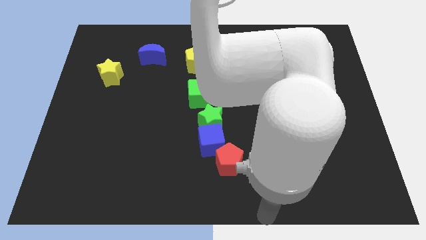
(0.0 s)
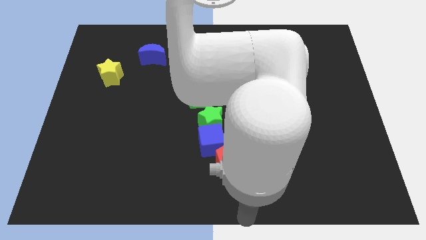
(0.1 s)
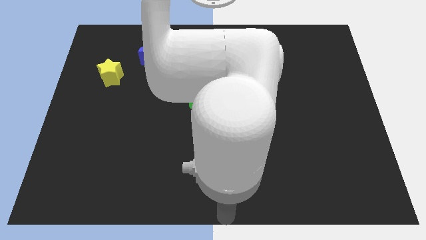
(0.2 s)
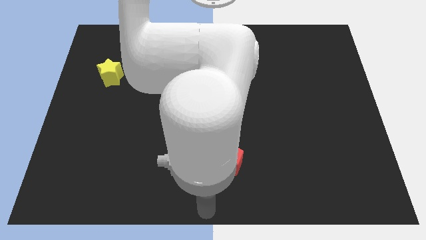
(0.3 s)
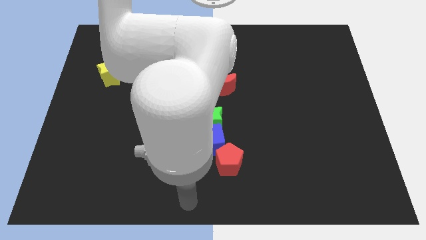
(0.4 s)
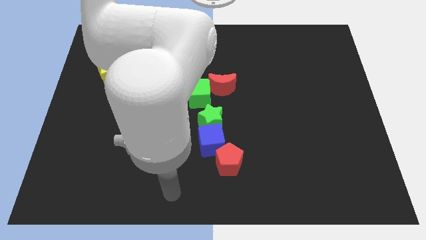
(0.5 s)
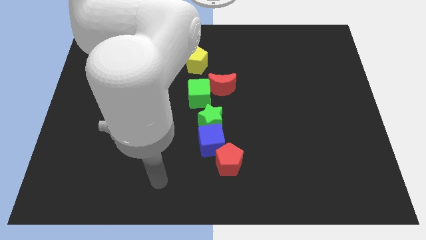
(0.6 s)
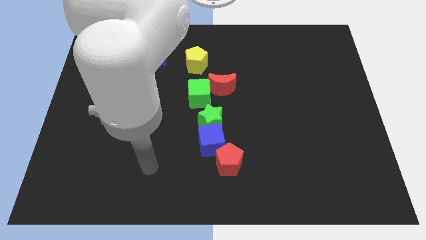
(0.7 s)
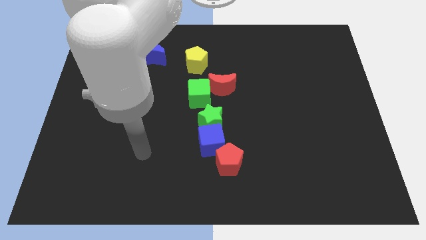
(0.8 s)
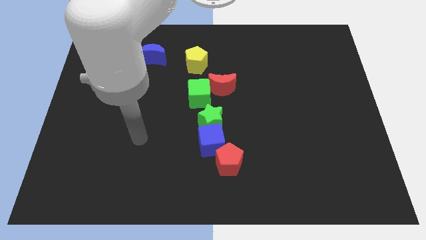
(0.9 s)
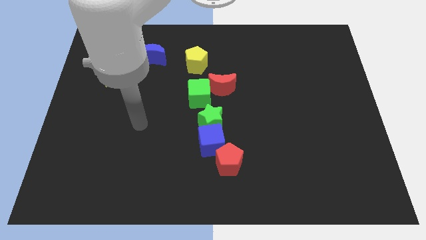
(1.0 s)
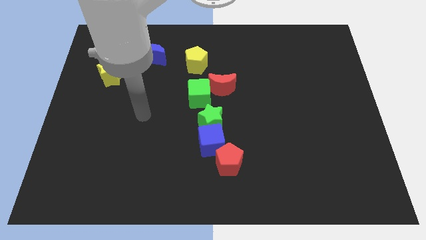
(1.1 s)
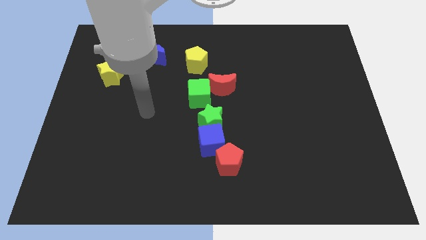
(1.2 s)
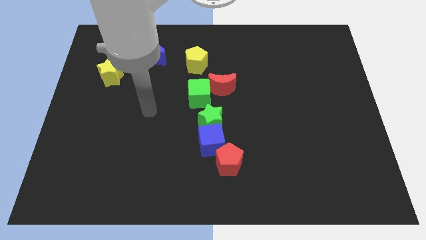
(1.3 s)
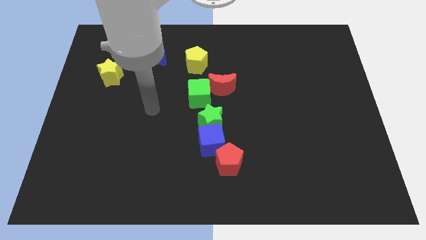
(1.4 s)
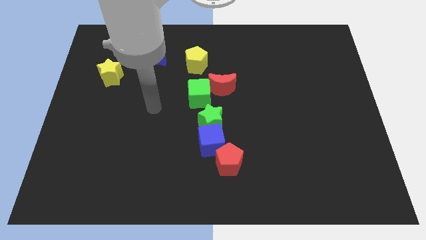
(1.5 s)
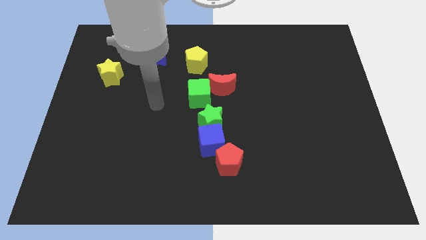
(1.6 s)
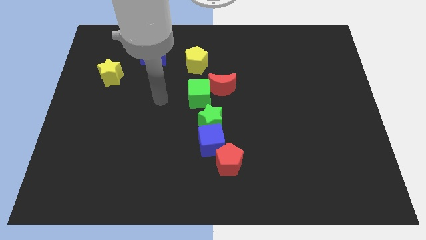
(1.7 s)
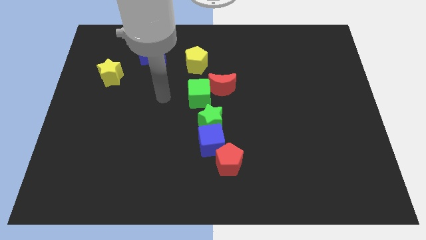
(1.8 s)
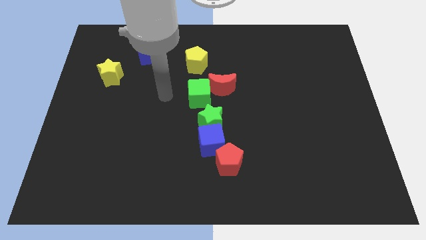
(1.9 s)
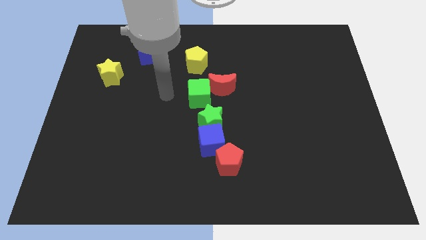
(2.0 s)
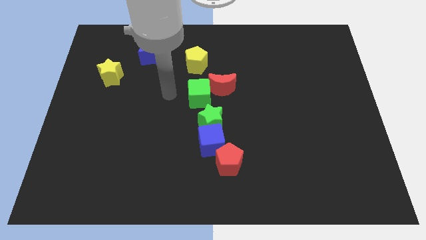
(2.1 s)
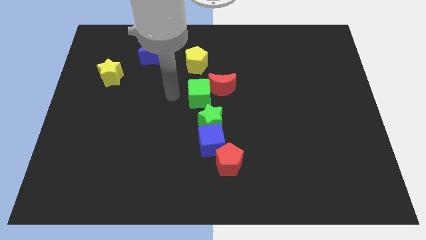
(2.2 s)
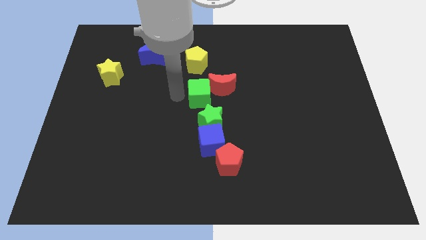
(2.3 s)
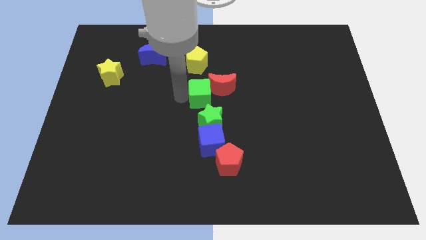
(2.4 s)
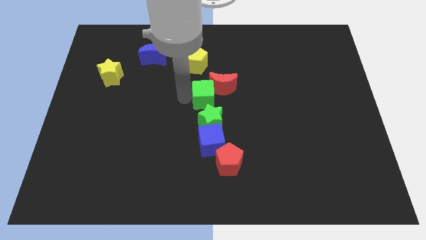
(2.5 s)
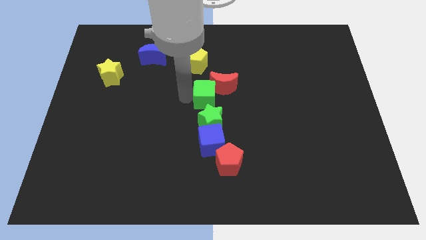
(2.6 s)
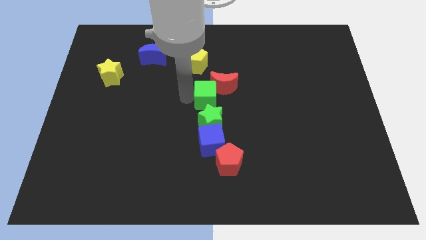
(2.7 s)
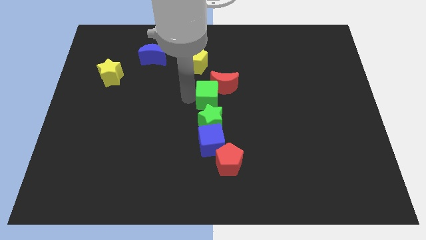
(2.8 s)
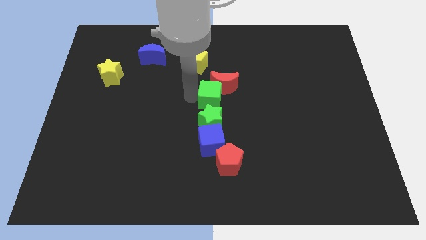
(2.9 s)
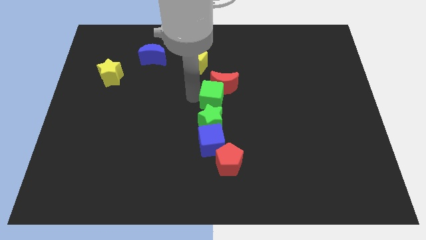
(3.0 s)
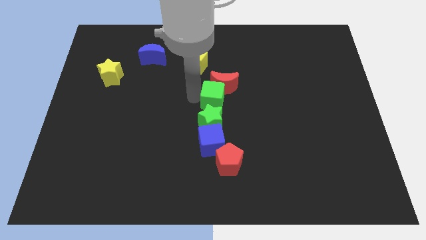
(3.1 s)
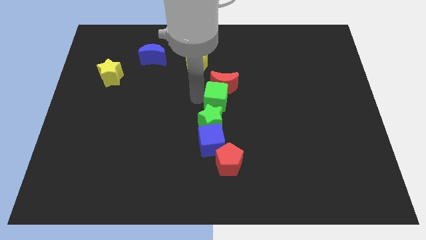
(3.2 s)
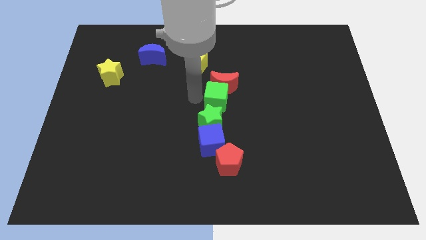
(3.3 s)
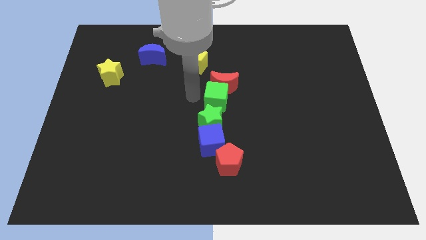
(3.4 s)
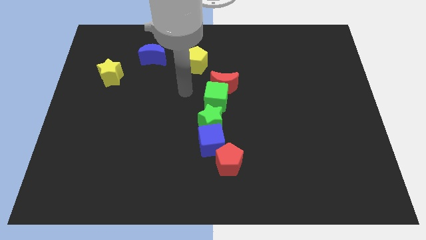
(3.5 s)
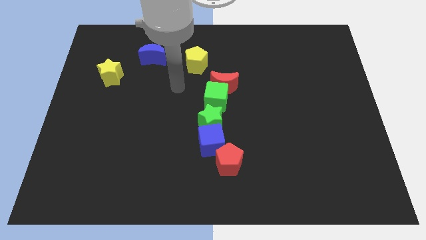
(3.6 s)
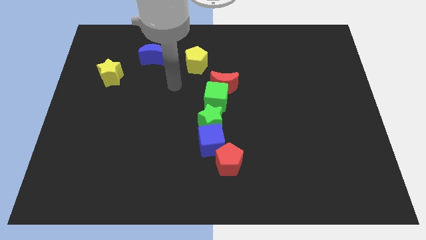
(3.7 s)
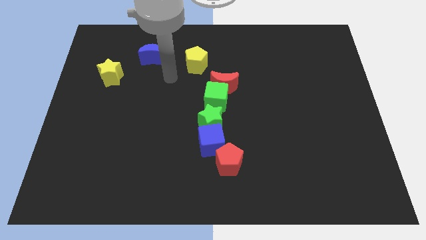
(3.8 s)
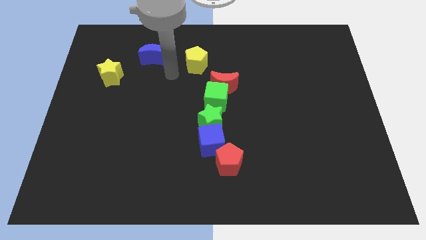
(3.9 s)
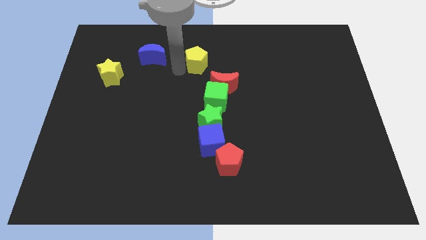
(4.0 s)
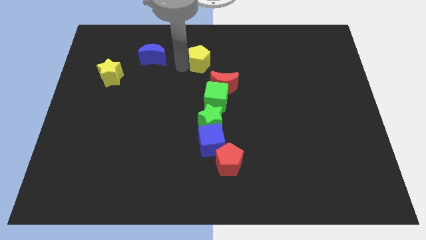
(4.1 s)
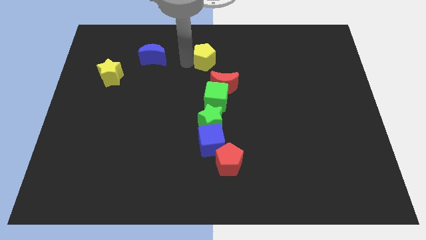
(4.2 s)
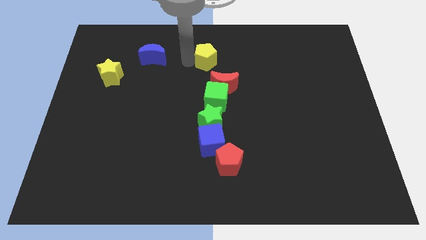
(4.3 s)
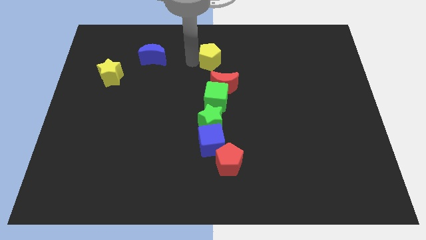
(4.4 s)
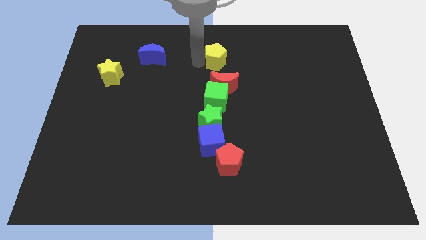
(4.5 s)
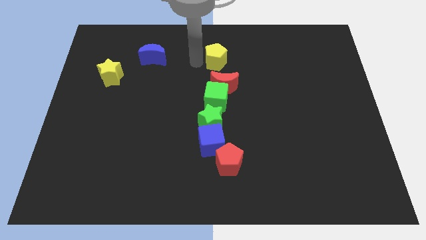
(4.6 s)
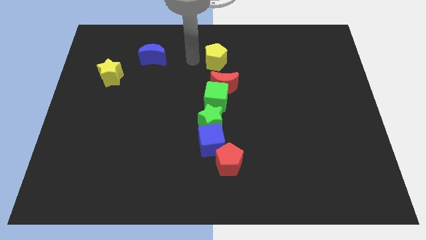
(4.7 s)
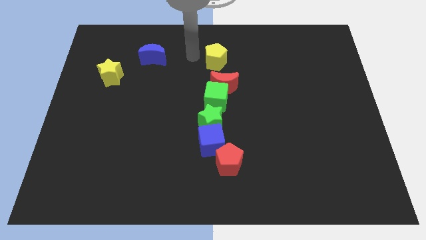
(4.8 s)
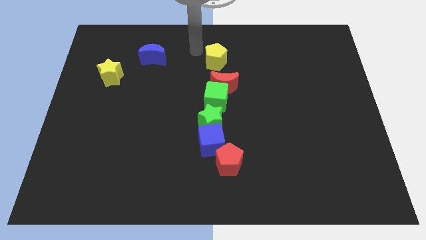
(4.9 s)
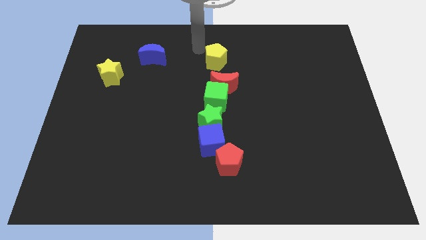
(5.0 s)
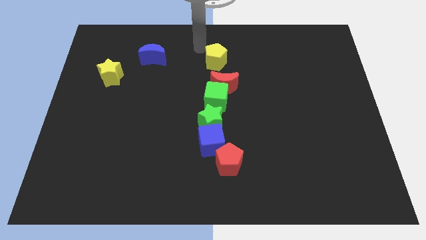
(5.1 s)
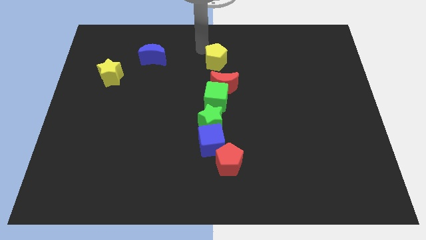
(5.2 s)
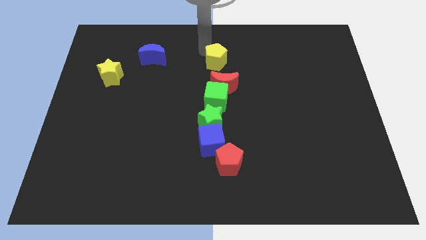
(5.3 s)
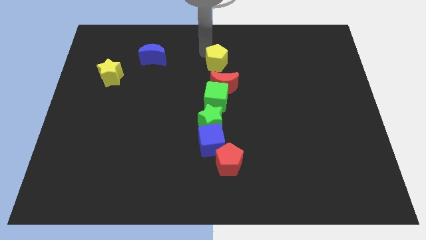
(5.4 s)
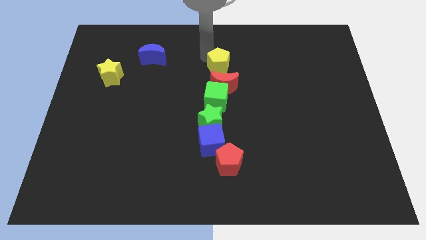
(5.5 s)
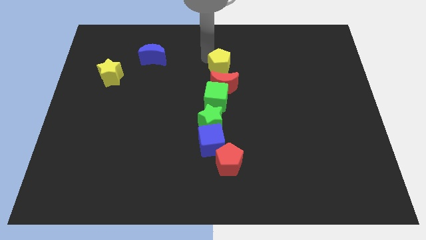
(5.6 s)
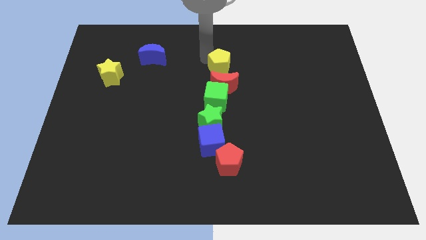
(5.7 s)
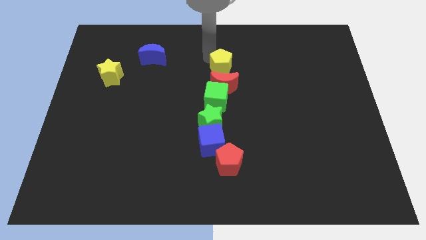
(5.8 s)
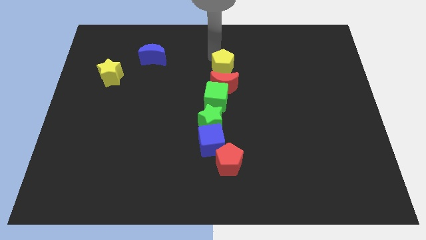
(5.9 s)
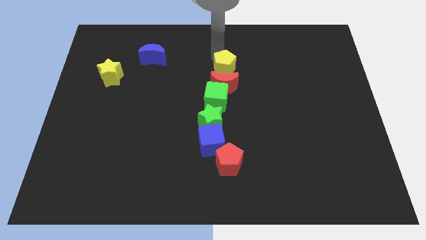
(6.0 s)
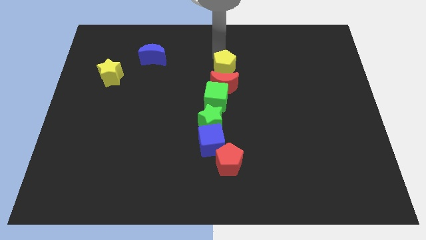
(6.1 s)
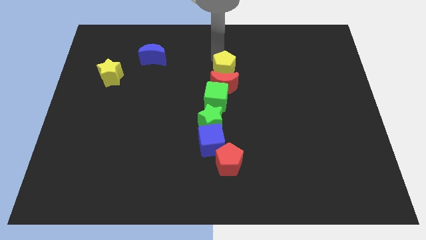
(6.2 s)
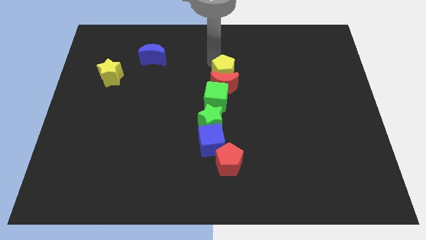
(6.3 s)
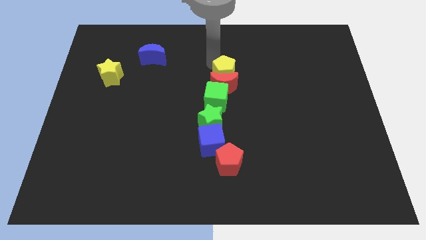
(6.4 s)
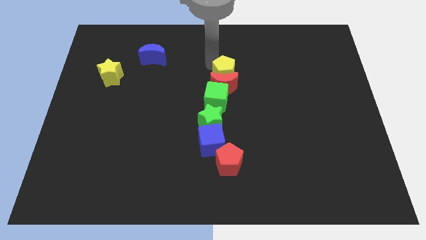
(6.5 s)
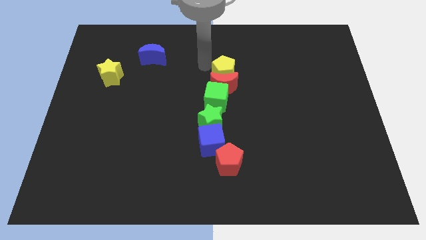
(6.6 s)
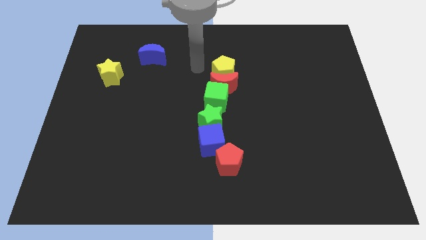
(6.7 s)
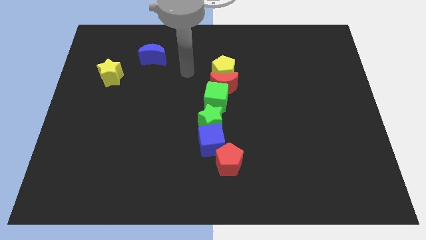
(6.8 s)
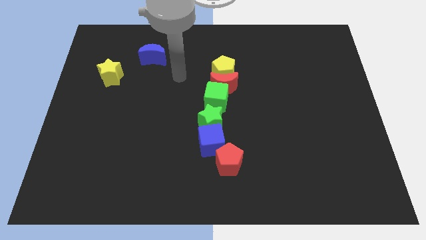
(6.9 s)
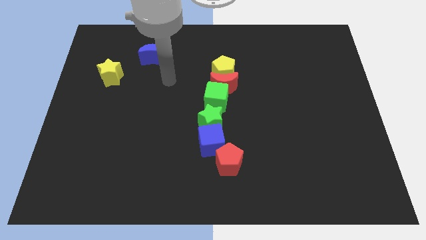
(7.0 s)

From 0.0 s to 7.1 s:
adjust the green cube slightly moving it right side

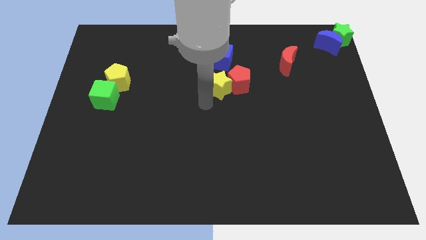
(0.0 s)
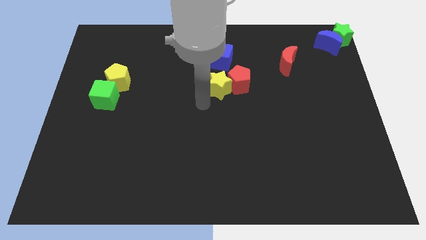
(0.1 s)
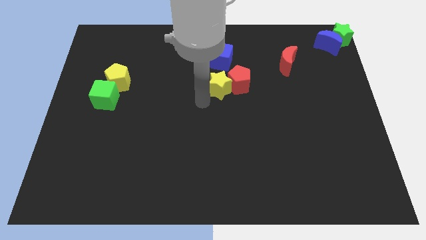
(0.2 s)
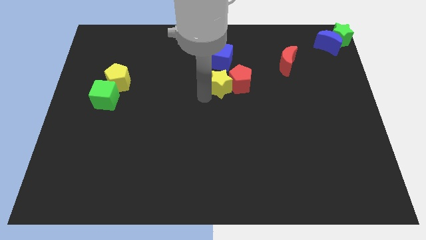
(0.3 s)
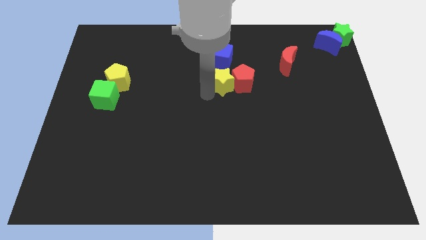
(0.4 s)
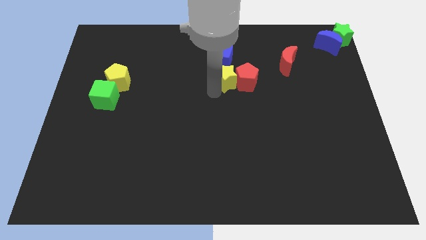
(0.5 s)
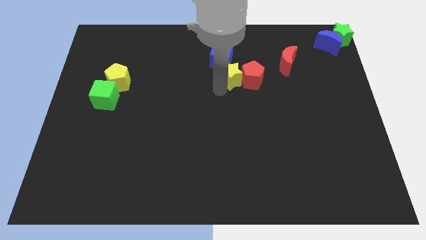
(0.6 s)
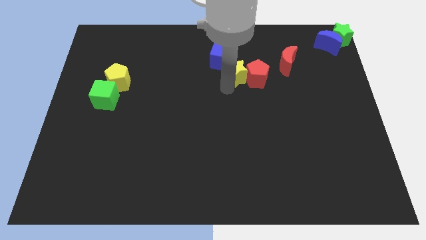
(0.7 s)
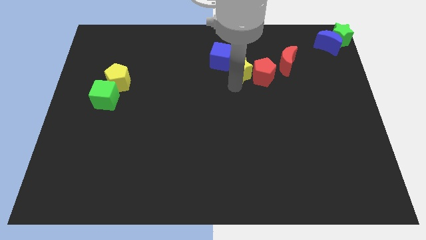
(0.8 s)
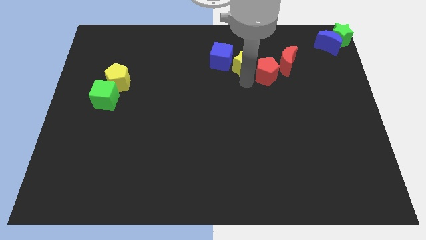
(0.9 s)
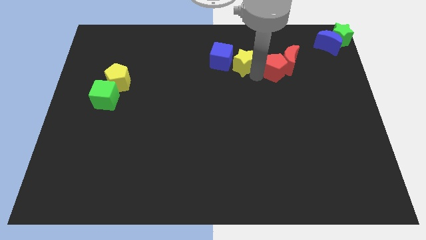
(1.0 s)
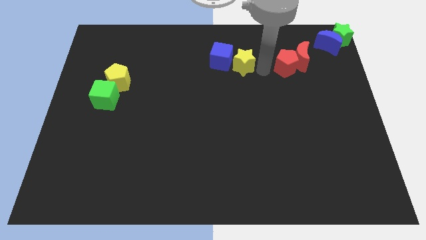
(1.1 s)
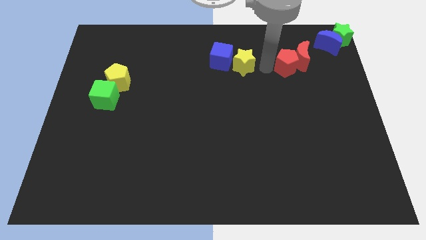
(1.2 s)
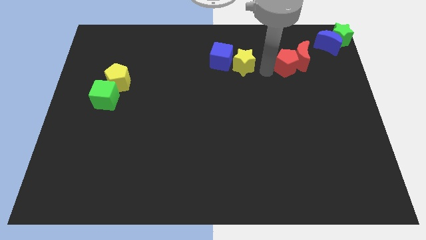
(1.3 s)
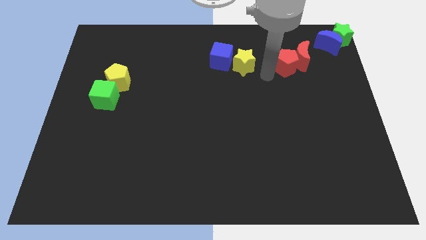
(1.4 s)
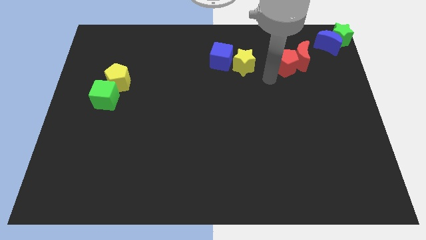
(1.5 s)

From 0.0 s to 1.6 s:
push the red pentagon into the red crescent

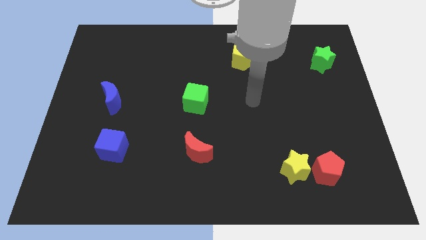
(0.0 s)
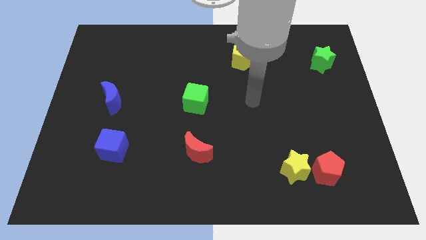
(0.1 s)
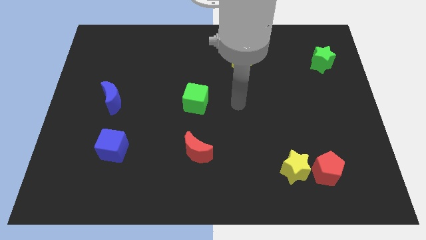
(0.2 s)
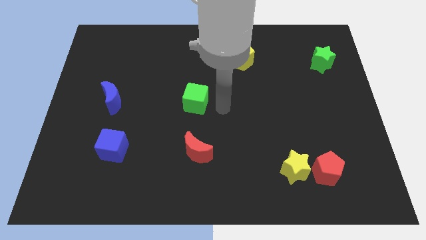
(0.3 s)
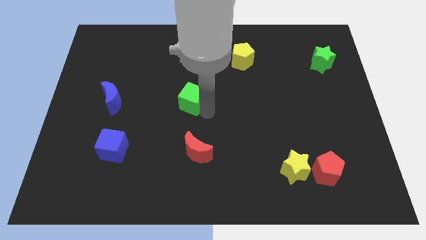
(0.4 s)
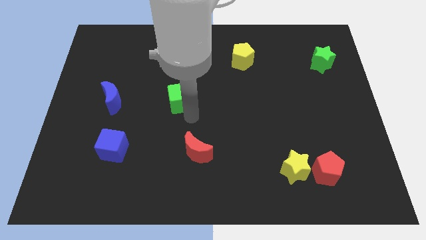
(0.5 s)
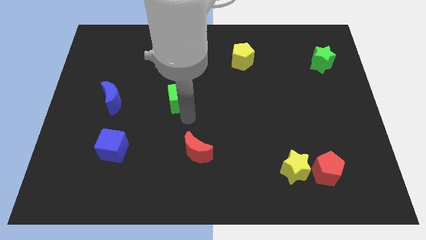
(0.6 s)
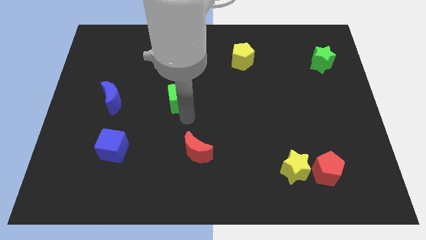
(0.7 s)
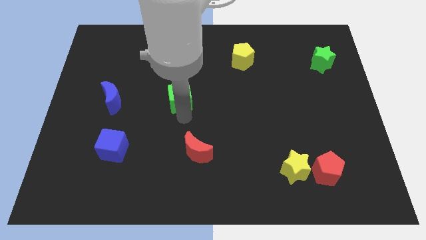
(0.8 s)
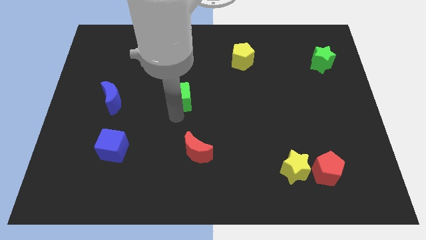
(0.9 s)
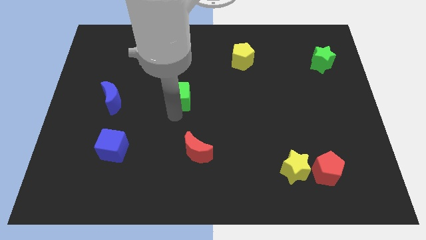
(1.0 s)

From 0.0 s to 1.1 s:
slightly move the green cube to the left side
